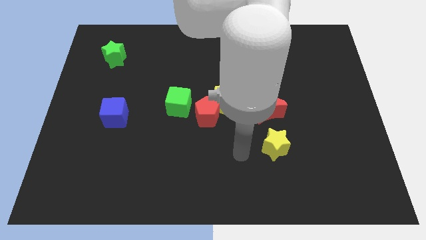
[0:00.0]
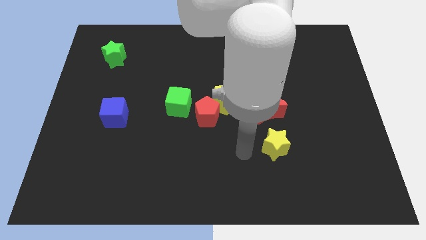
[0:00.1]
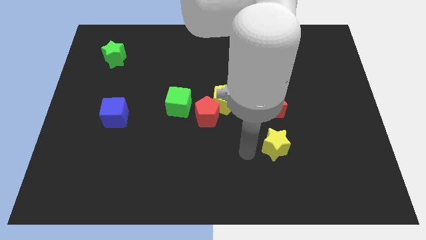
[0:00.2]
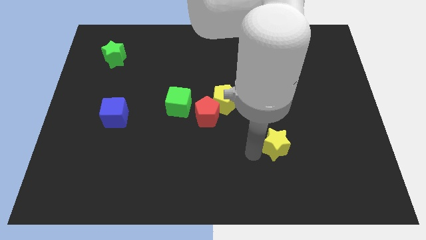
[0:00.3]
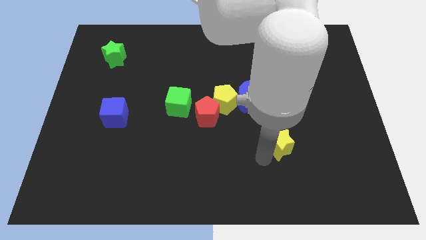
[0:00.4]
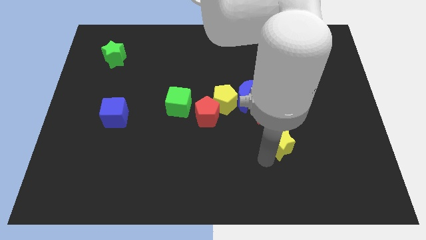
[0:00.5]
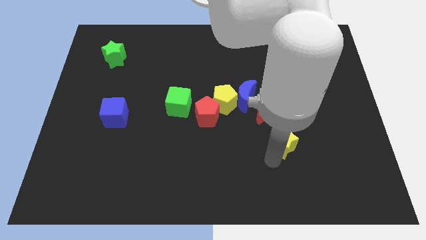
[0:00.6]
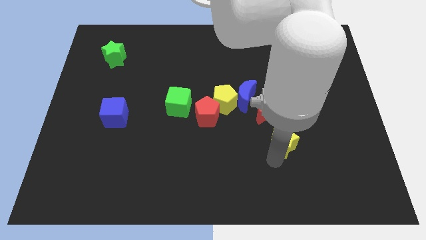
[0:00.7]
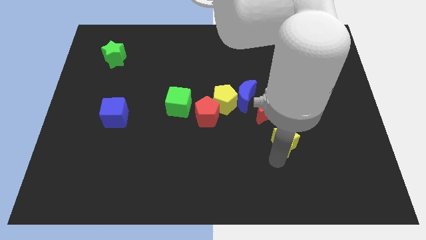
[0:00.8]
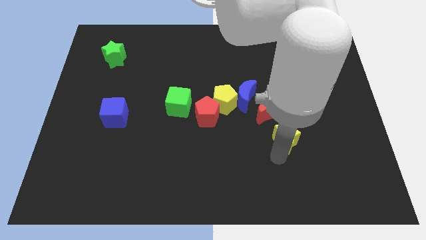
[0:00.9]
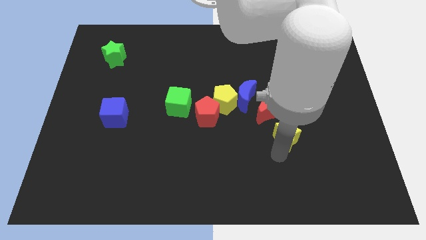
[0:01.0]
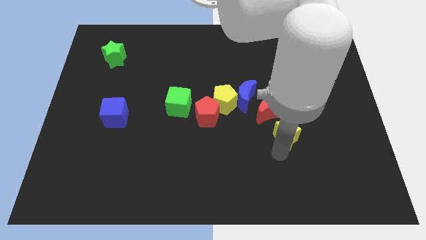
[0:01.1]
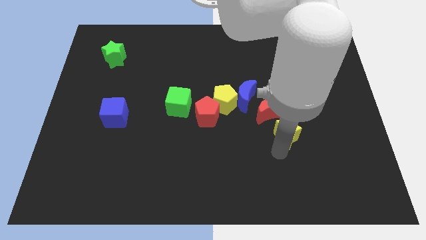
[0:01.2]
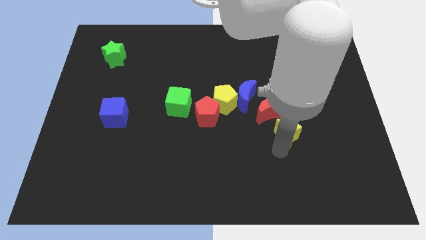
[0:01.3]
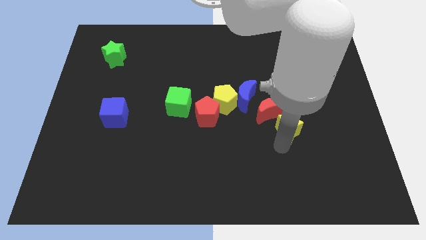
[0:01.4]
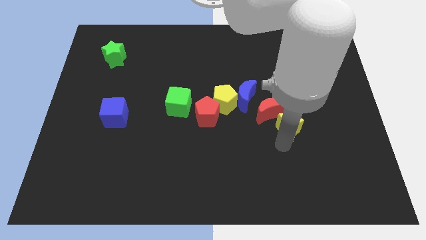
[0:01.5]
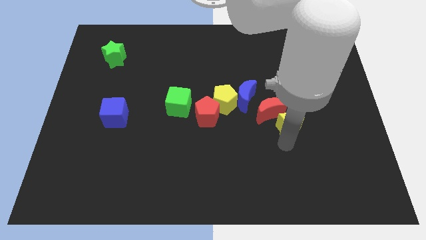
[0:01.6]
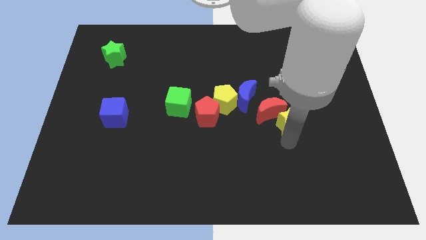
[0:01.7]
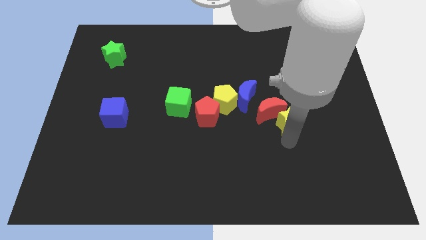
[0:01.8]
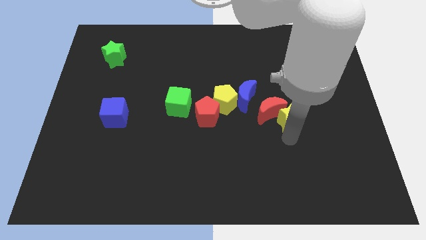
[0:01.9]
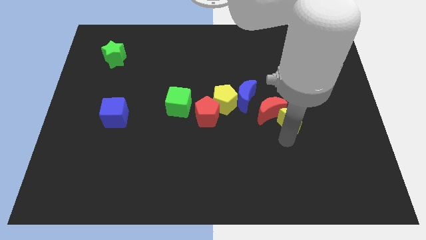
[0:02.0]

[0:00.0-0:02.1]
move the yellow star into the bottom side of the red moon

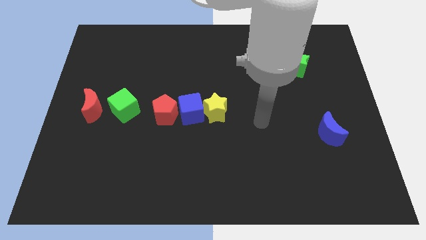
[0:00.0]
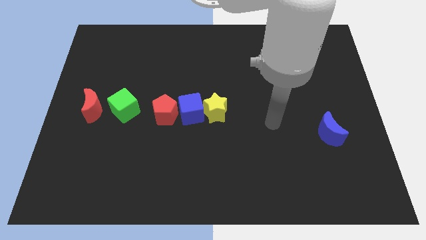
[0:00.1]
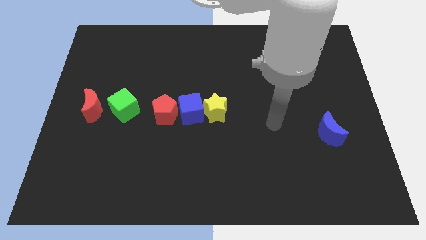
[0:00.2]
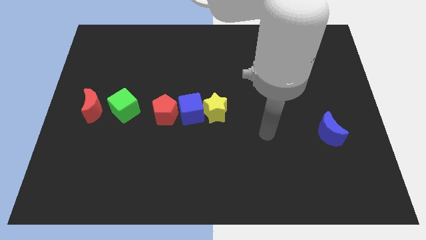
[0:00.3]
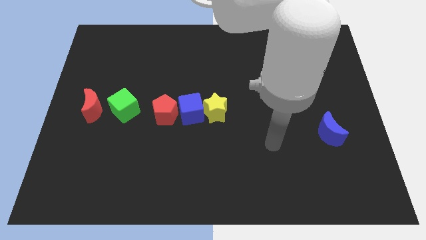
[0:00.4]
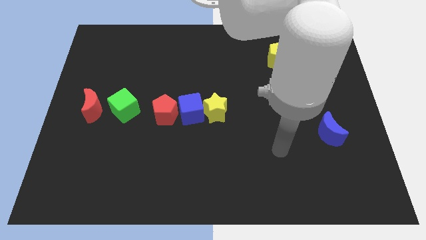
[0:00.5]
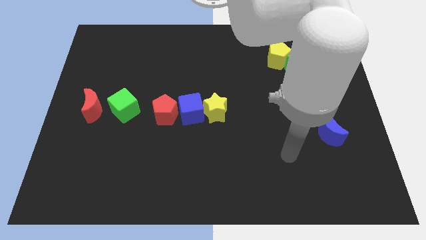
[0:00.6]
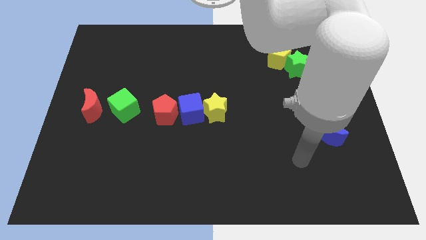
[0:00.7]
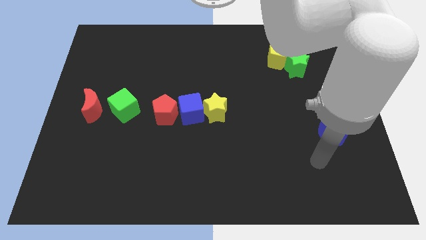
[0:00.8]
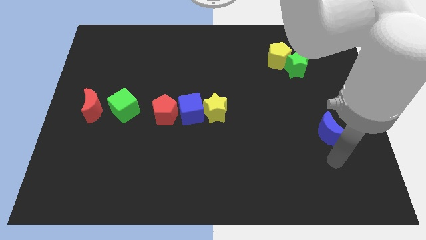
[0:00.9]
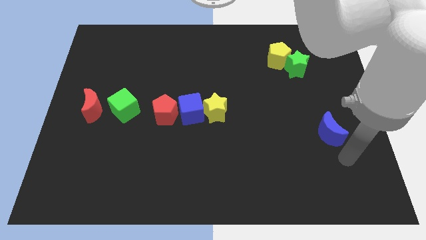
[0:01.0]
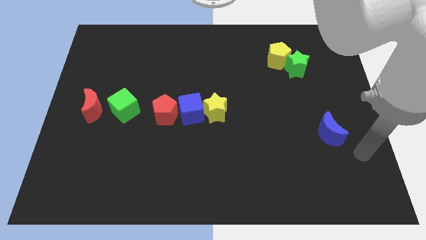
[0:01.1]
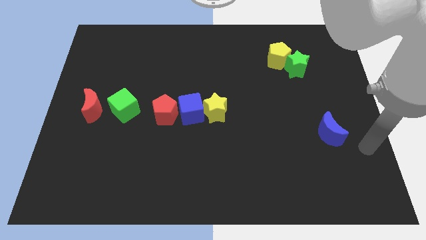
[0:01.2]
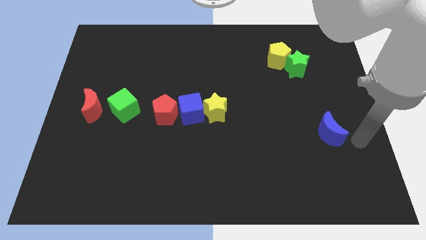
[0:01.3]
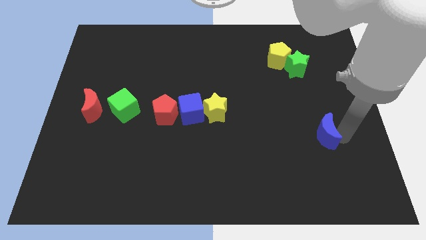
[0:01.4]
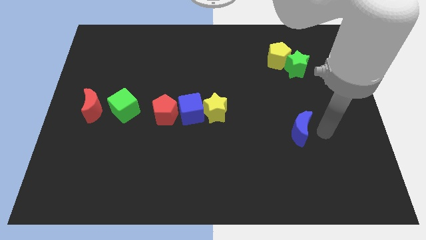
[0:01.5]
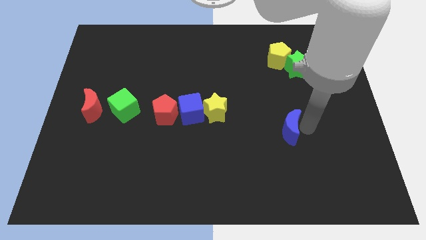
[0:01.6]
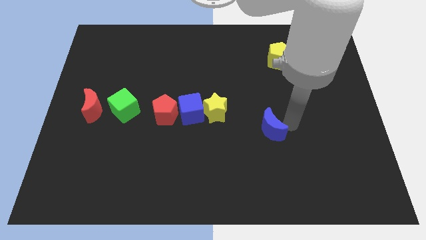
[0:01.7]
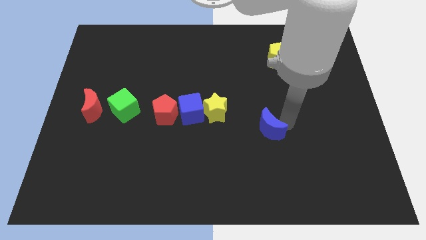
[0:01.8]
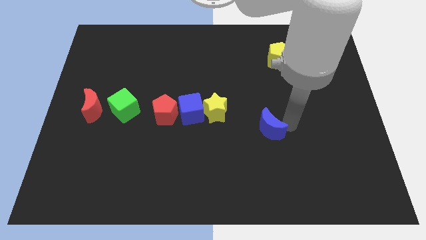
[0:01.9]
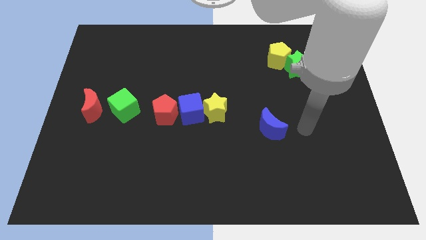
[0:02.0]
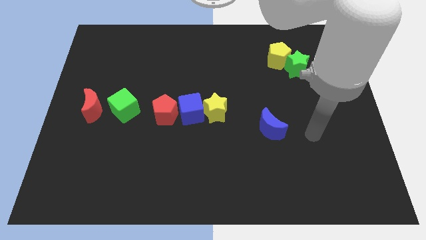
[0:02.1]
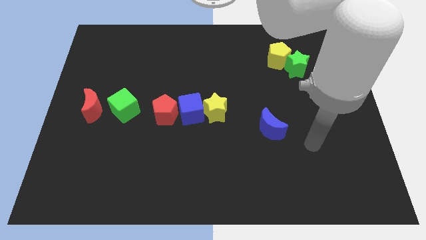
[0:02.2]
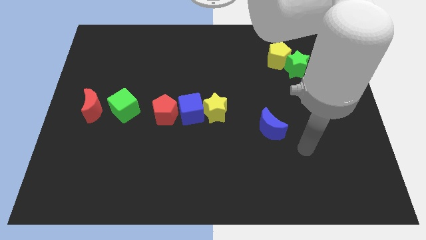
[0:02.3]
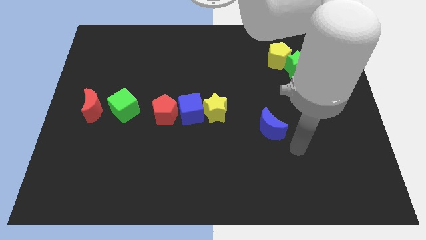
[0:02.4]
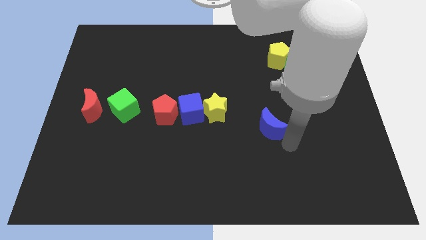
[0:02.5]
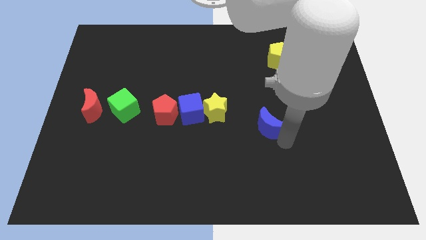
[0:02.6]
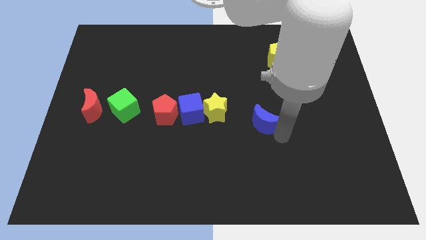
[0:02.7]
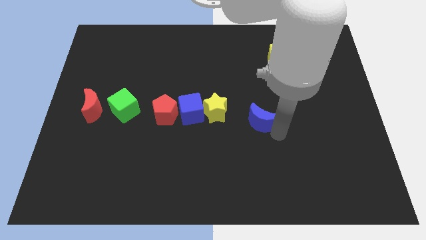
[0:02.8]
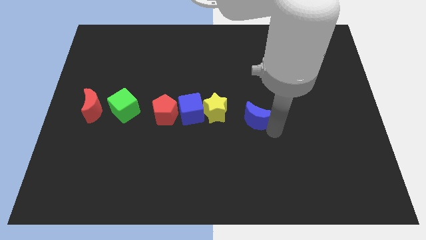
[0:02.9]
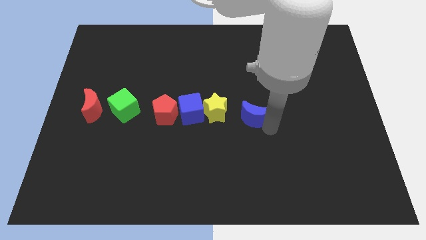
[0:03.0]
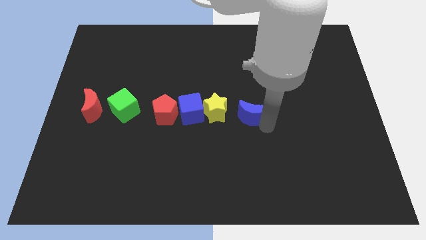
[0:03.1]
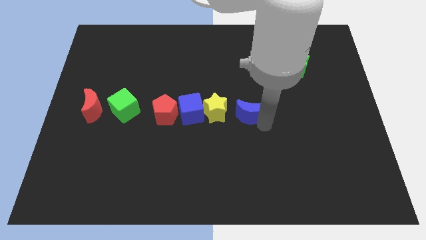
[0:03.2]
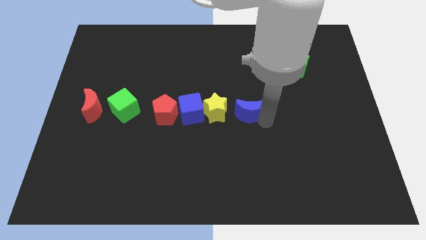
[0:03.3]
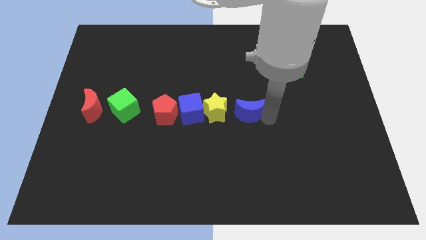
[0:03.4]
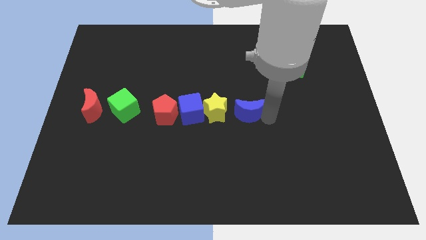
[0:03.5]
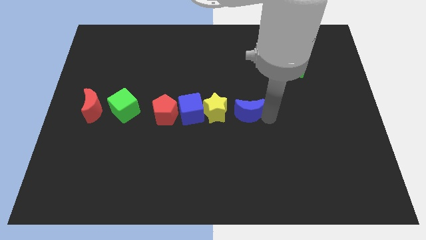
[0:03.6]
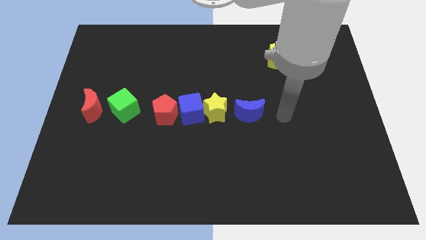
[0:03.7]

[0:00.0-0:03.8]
place the blue moon to the right of the yellow star

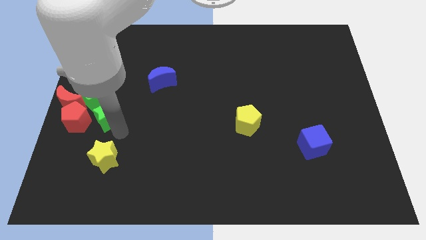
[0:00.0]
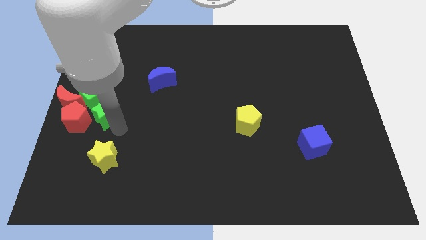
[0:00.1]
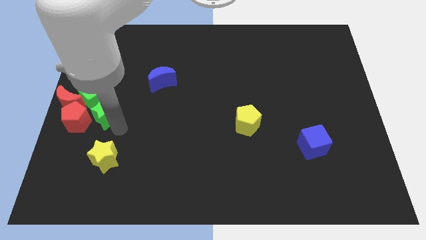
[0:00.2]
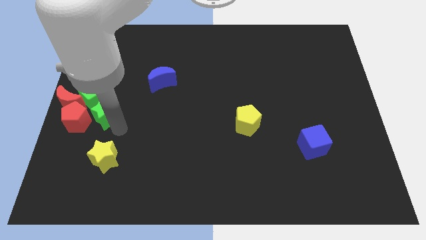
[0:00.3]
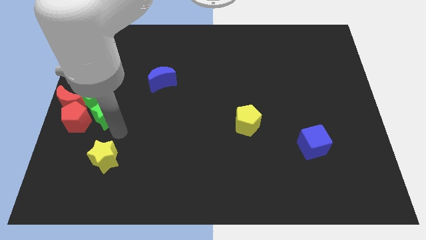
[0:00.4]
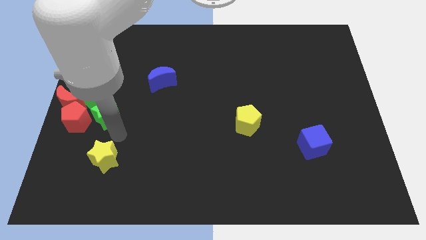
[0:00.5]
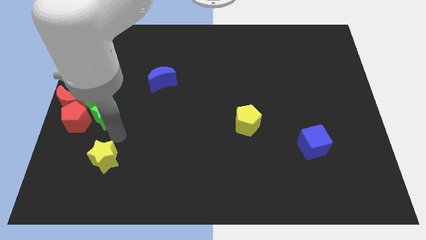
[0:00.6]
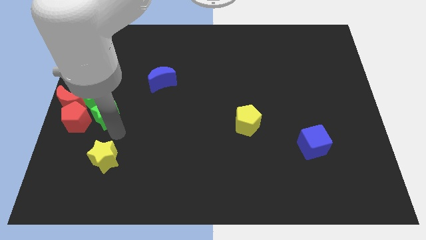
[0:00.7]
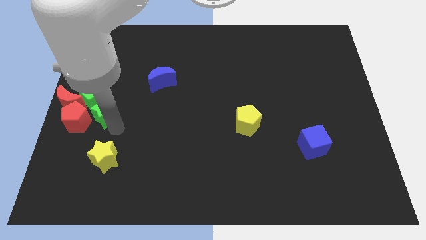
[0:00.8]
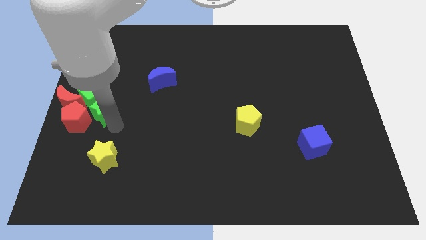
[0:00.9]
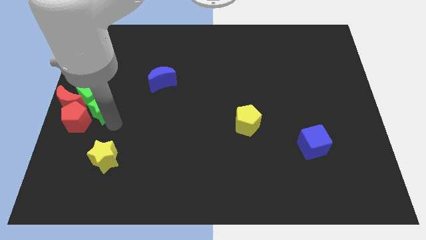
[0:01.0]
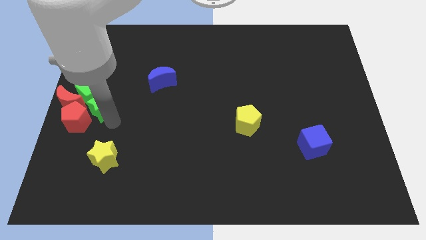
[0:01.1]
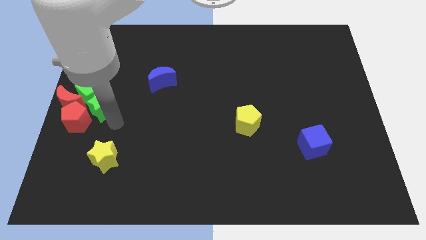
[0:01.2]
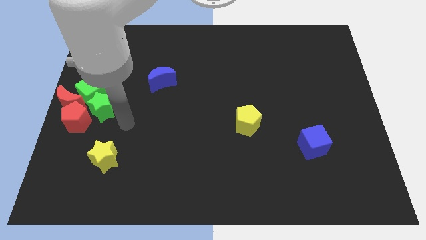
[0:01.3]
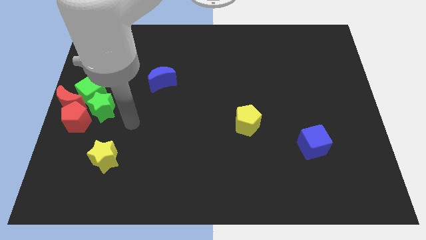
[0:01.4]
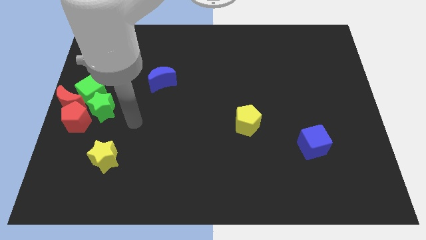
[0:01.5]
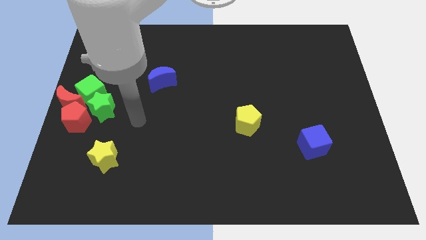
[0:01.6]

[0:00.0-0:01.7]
push the green star into the green cube

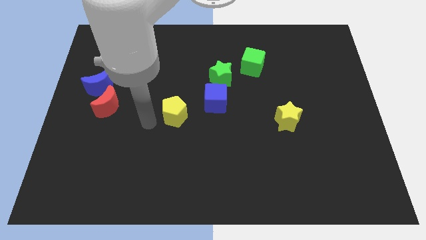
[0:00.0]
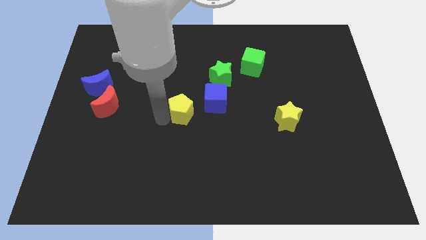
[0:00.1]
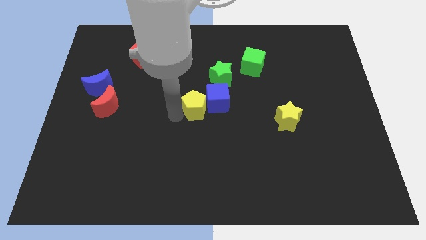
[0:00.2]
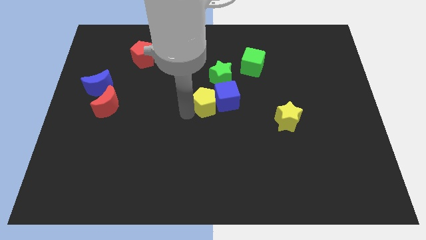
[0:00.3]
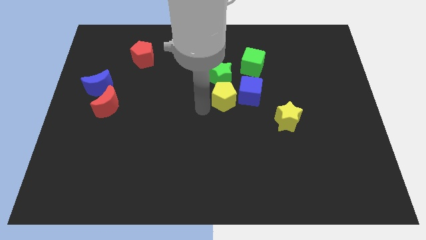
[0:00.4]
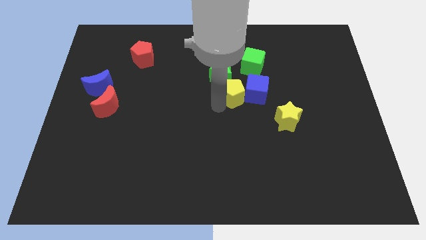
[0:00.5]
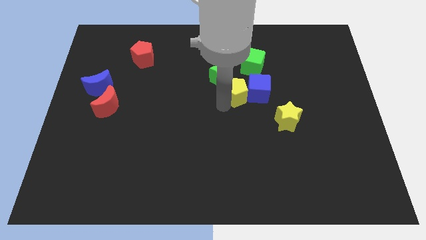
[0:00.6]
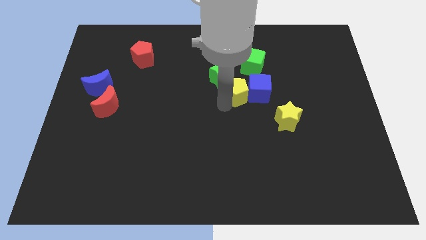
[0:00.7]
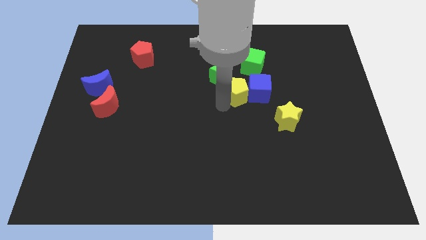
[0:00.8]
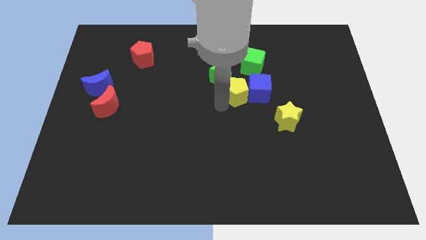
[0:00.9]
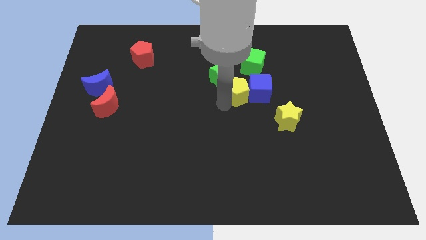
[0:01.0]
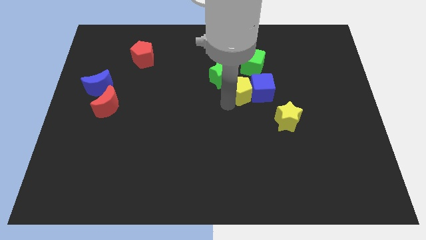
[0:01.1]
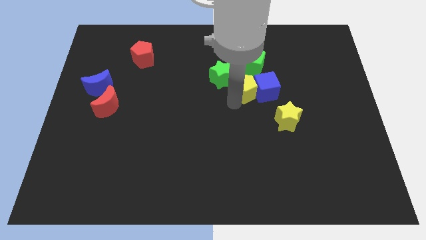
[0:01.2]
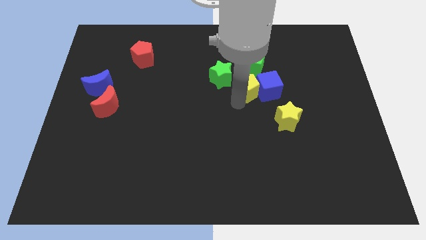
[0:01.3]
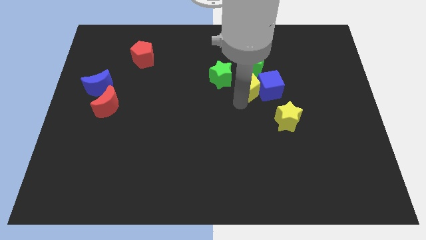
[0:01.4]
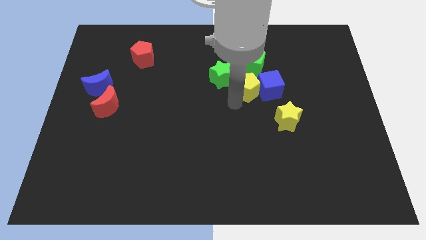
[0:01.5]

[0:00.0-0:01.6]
push the yellow pentagon into the blue cube
